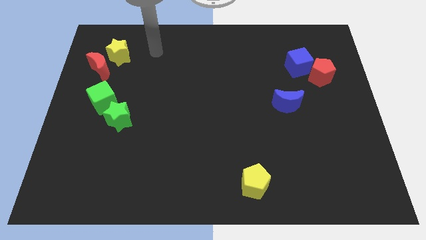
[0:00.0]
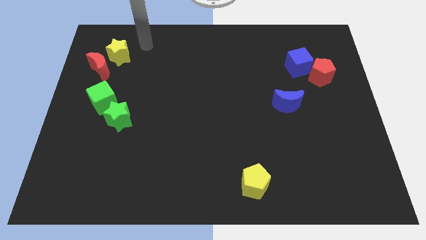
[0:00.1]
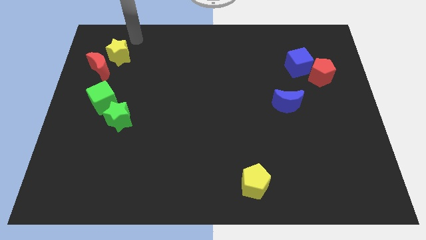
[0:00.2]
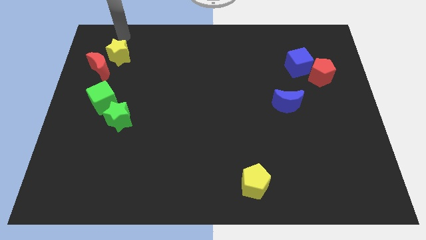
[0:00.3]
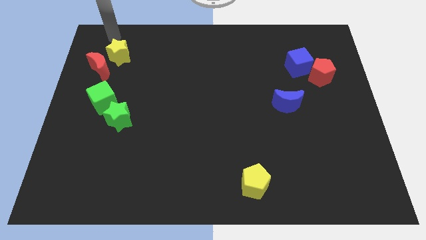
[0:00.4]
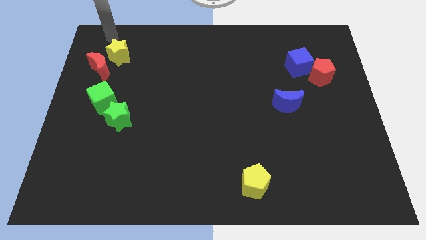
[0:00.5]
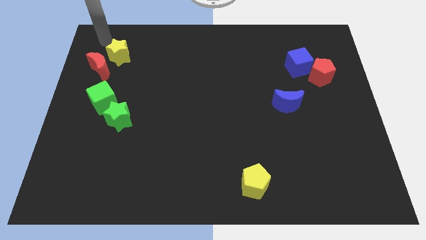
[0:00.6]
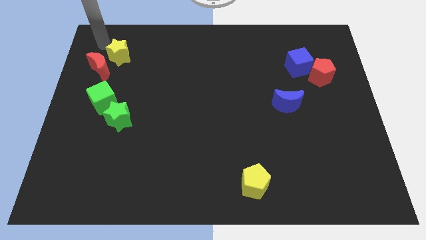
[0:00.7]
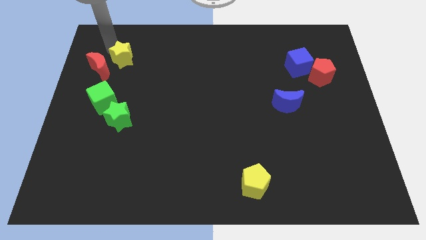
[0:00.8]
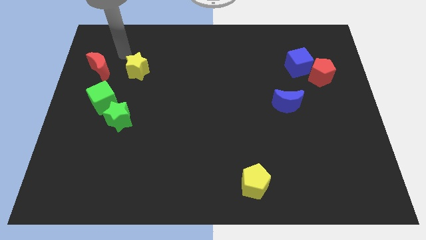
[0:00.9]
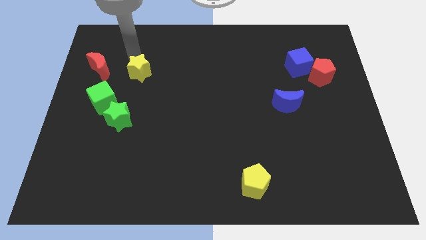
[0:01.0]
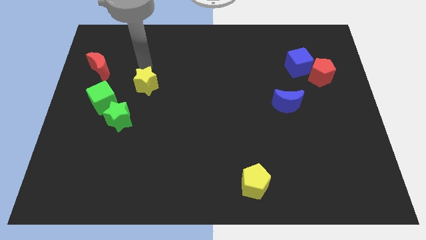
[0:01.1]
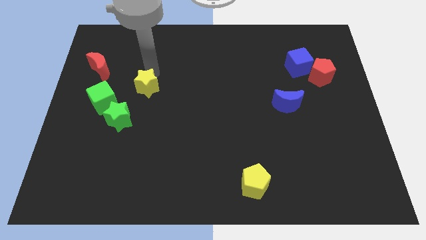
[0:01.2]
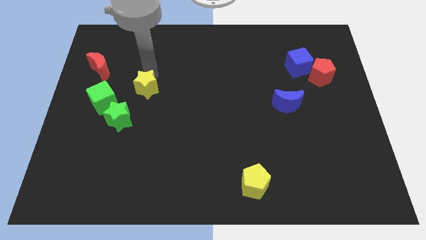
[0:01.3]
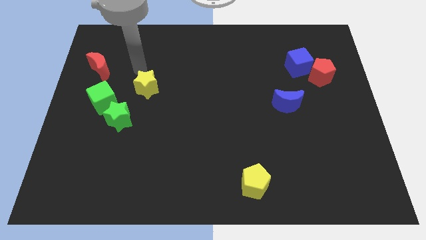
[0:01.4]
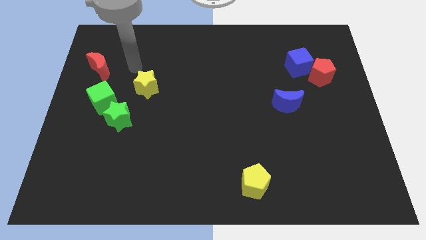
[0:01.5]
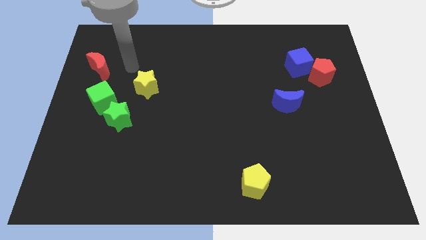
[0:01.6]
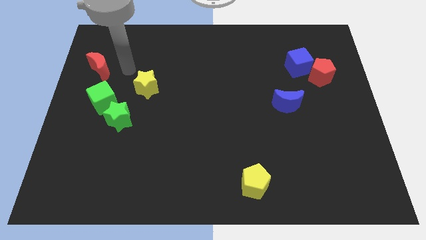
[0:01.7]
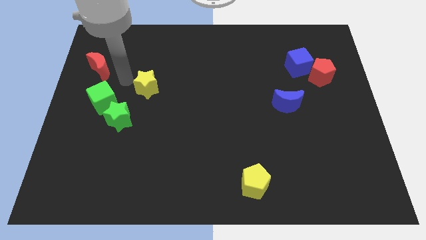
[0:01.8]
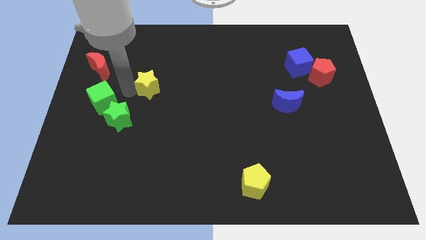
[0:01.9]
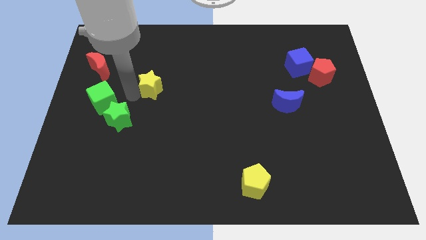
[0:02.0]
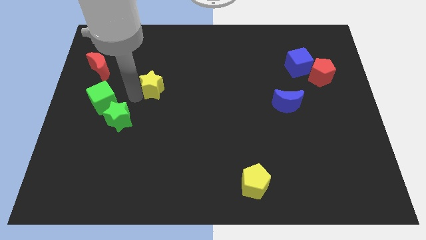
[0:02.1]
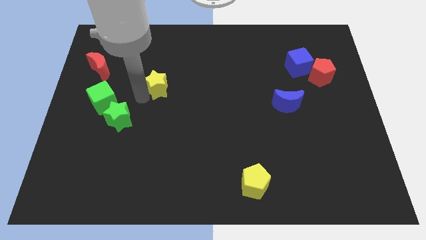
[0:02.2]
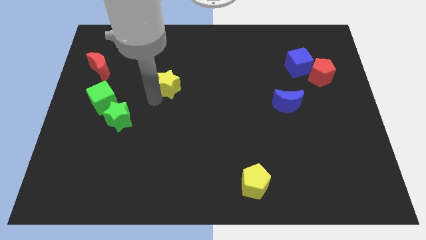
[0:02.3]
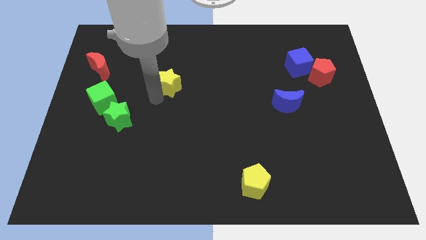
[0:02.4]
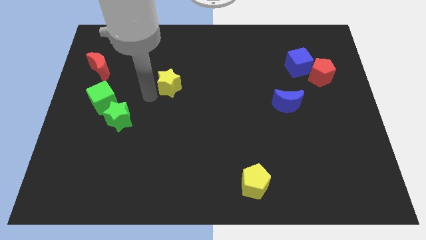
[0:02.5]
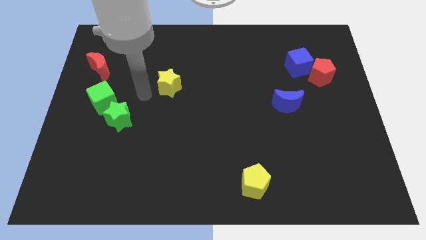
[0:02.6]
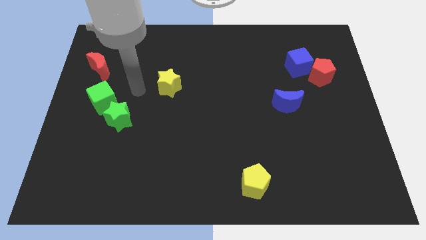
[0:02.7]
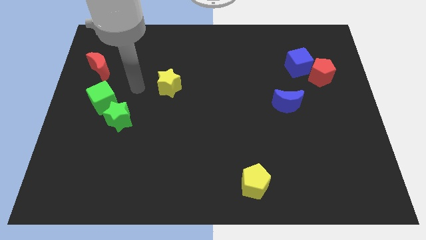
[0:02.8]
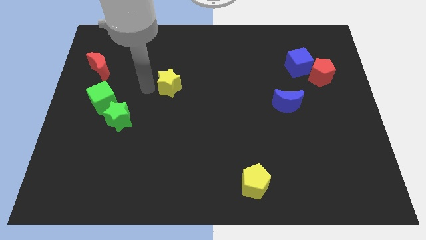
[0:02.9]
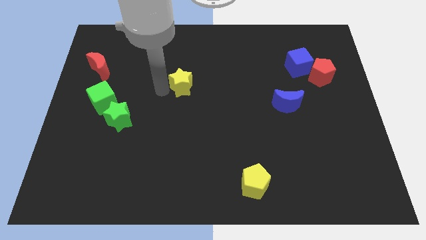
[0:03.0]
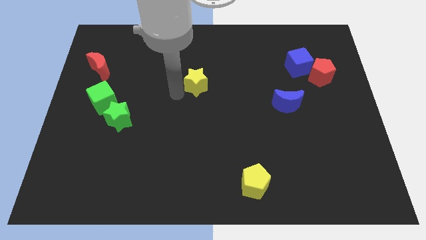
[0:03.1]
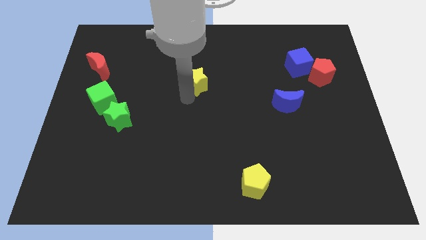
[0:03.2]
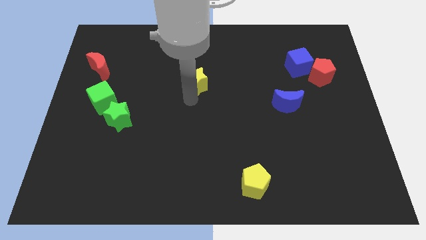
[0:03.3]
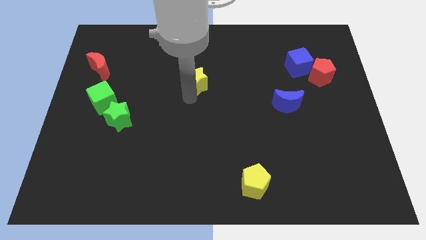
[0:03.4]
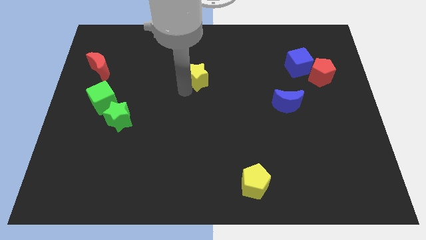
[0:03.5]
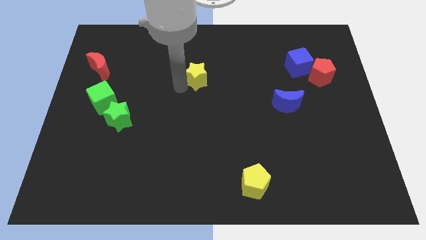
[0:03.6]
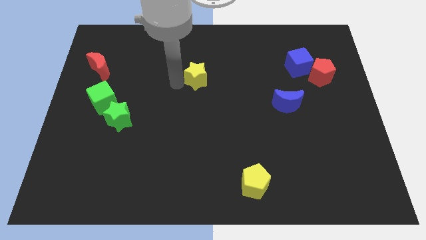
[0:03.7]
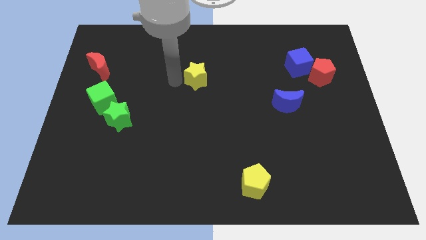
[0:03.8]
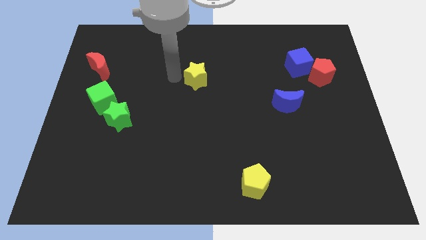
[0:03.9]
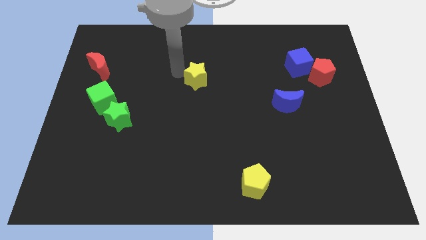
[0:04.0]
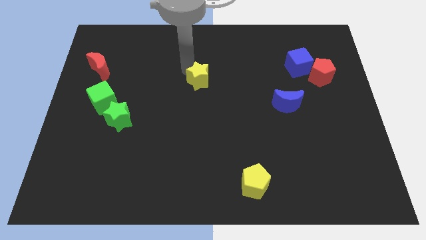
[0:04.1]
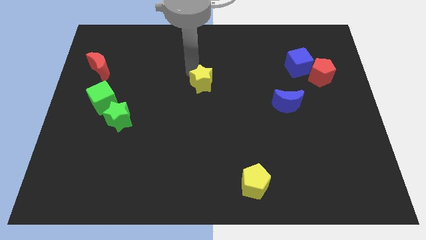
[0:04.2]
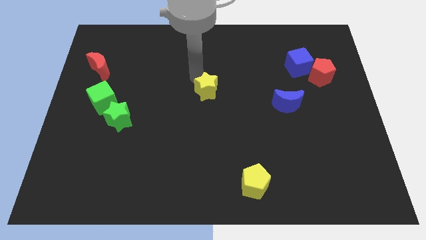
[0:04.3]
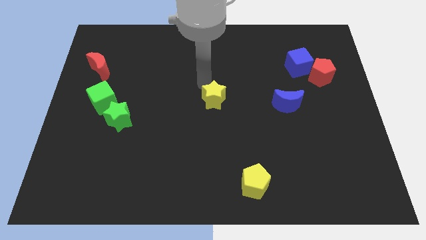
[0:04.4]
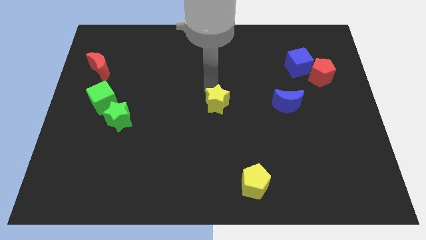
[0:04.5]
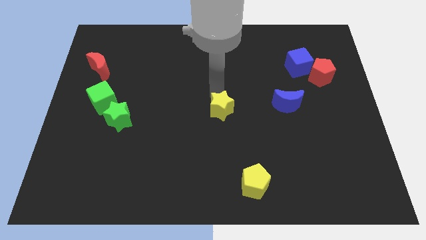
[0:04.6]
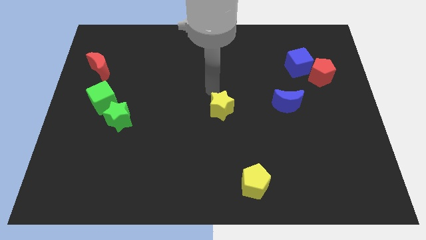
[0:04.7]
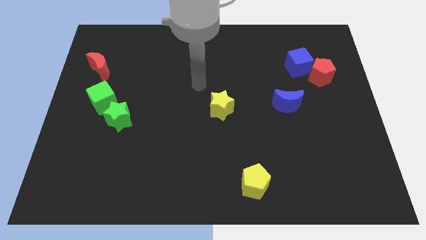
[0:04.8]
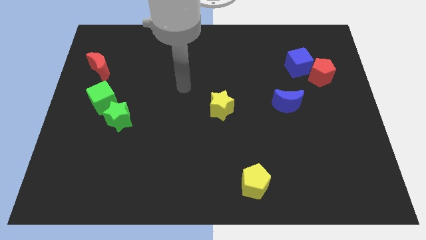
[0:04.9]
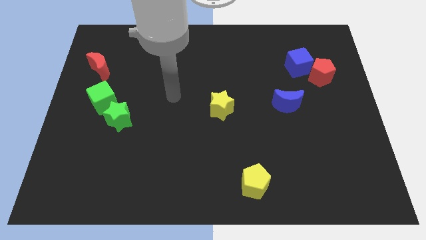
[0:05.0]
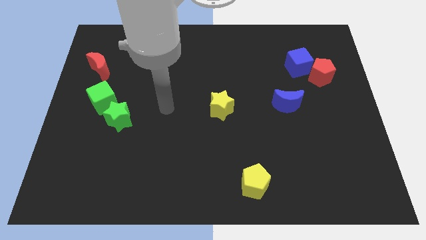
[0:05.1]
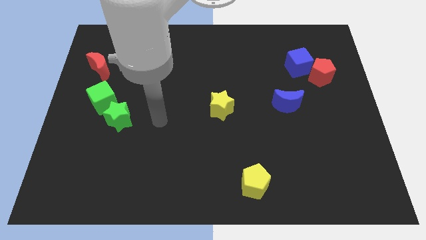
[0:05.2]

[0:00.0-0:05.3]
place the yellow star in between green star and blue crescent

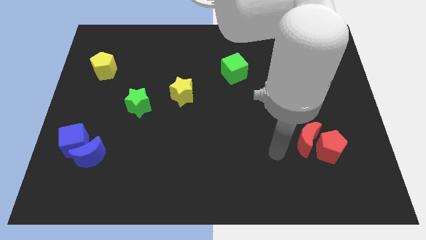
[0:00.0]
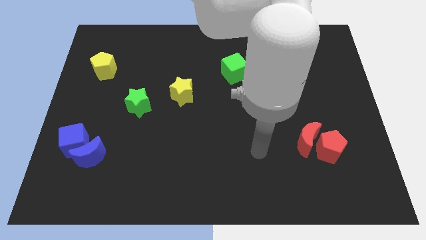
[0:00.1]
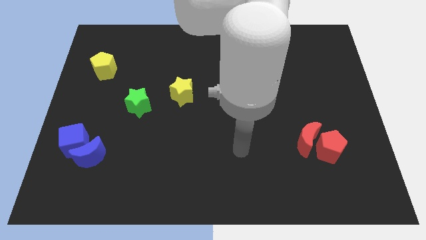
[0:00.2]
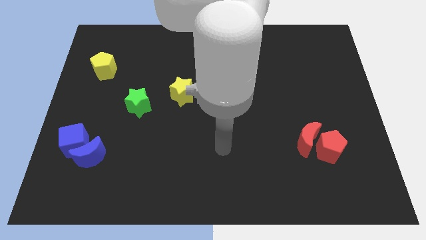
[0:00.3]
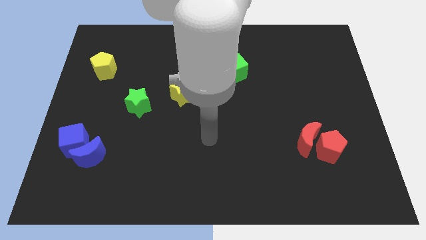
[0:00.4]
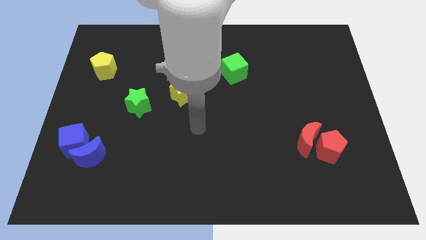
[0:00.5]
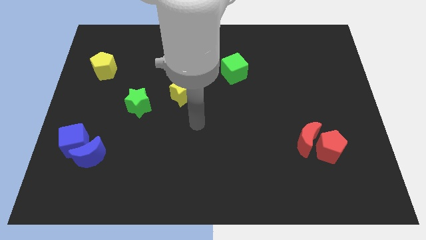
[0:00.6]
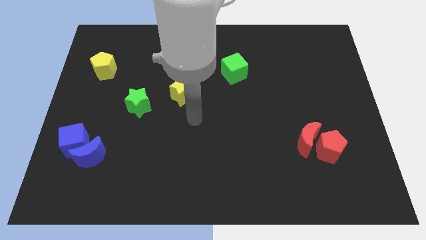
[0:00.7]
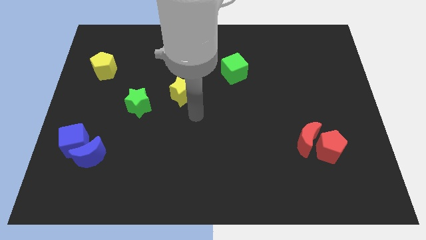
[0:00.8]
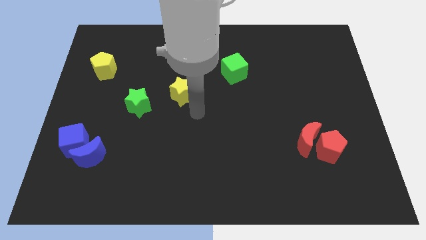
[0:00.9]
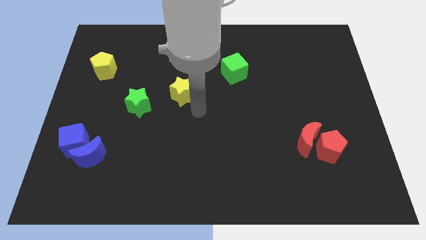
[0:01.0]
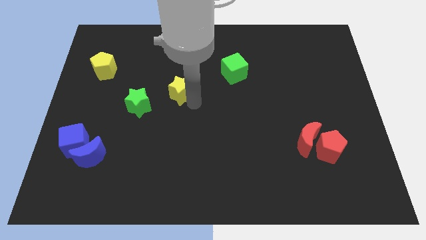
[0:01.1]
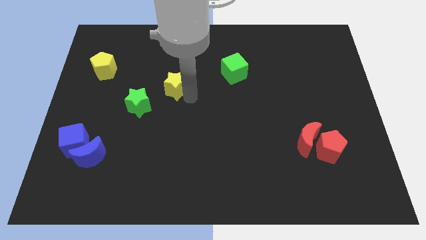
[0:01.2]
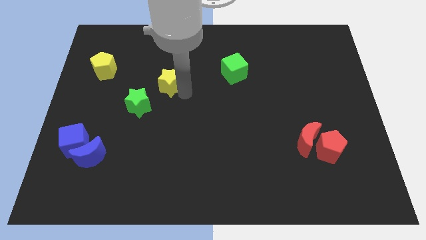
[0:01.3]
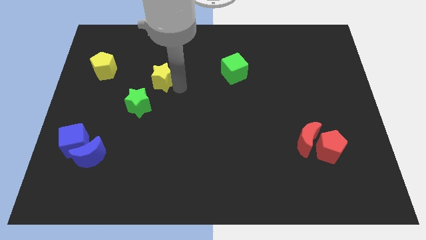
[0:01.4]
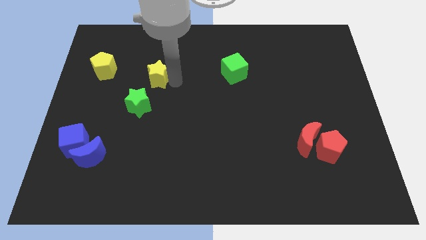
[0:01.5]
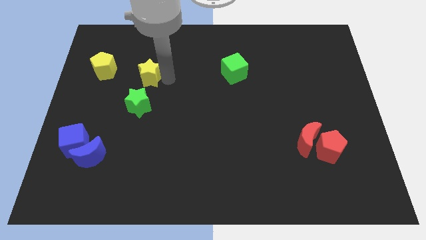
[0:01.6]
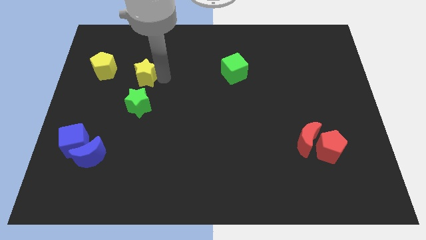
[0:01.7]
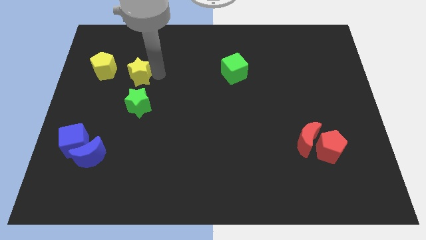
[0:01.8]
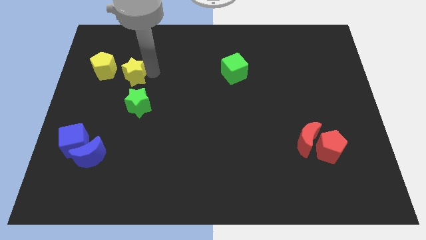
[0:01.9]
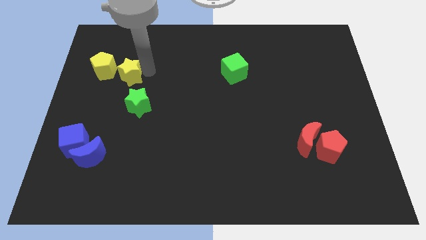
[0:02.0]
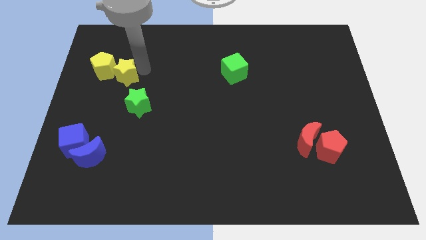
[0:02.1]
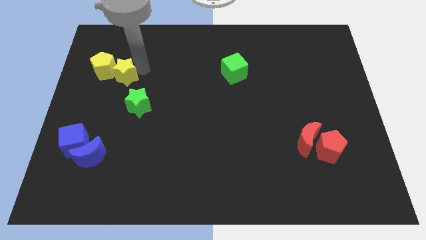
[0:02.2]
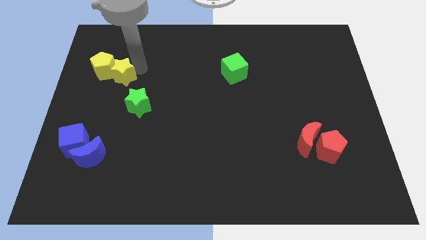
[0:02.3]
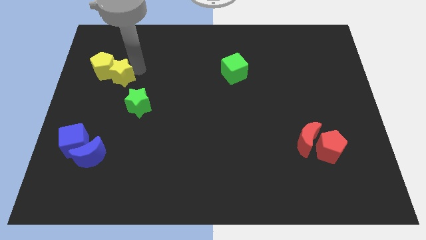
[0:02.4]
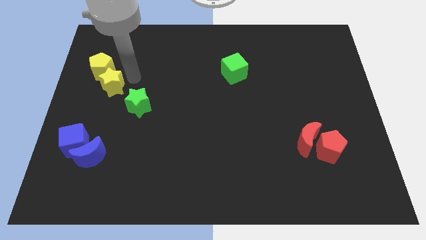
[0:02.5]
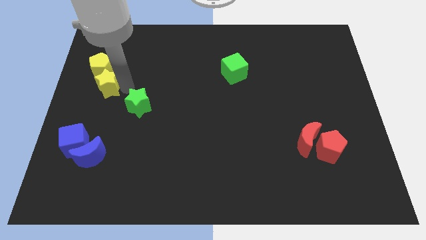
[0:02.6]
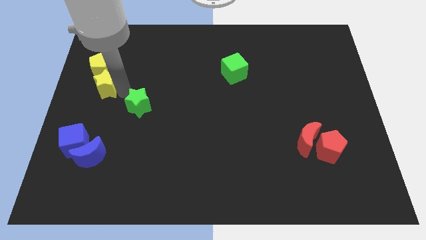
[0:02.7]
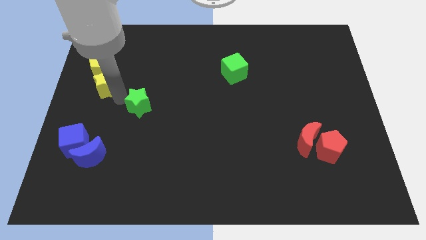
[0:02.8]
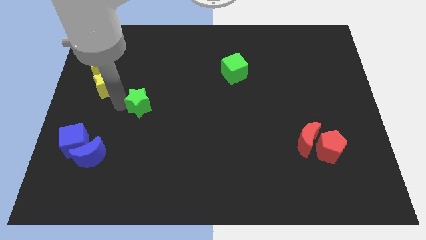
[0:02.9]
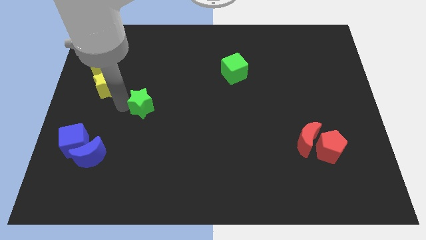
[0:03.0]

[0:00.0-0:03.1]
put the yellow star vertically below the yellow pentagon

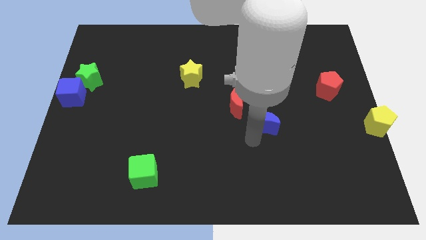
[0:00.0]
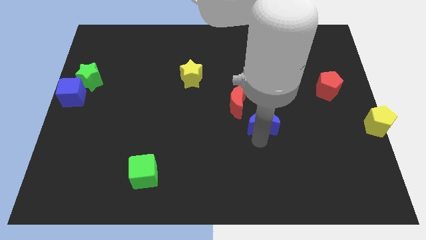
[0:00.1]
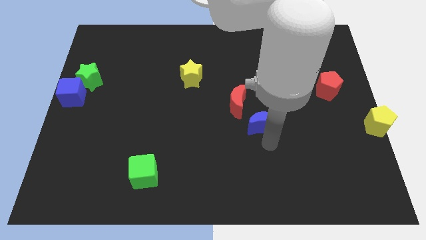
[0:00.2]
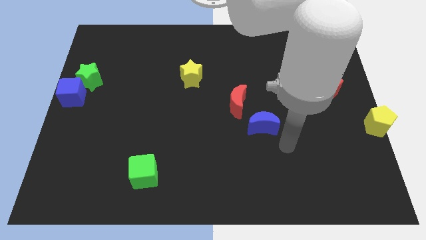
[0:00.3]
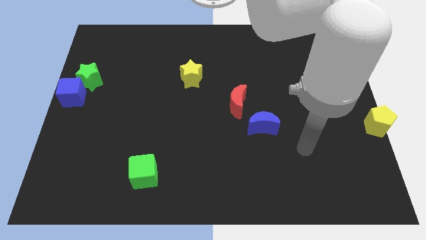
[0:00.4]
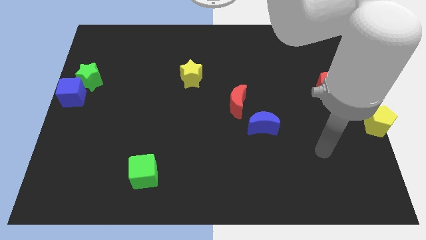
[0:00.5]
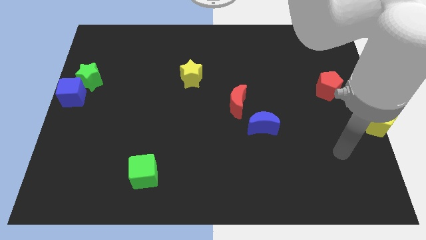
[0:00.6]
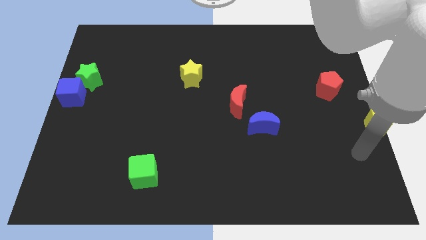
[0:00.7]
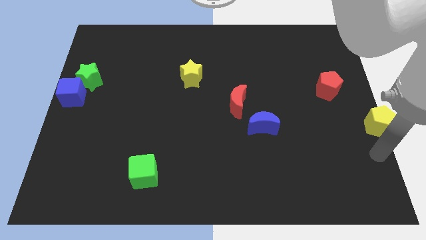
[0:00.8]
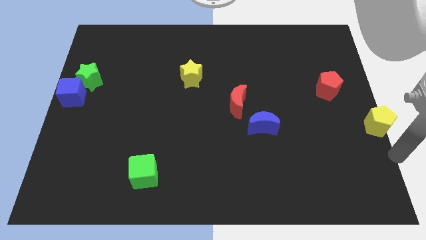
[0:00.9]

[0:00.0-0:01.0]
move your arm away from the blue moon
